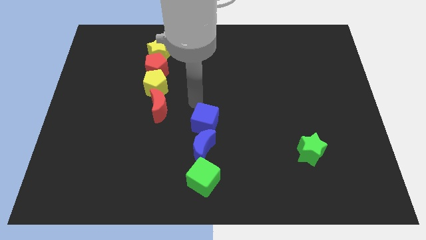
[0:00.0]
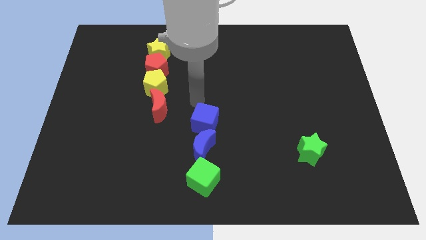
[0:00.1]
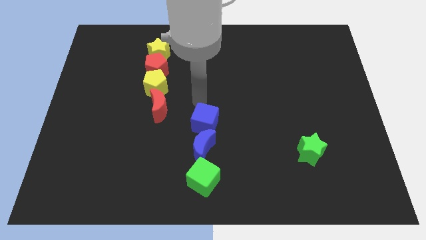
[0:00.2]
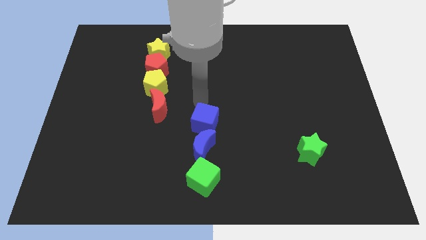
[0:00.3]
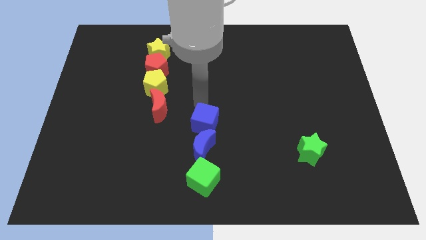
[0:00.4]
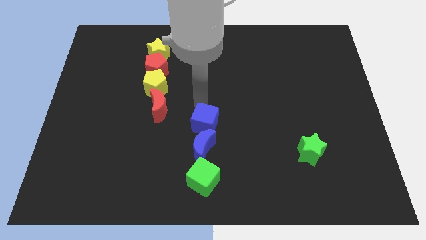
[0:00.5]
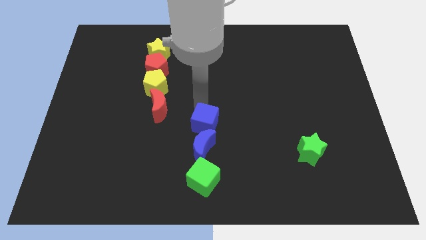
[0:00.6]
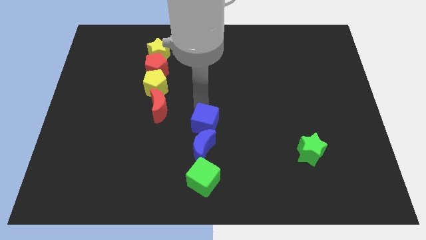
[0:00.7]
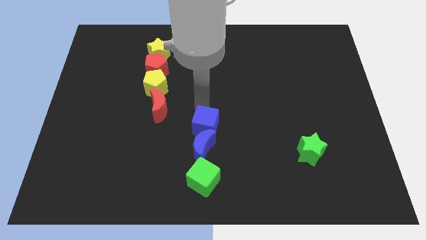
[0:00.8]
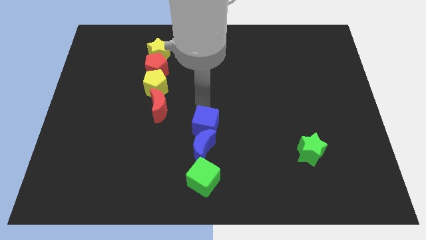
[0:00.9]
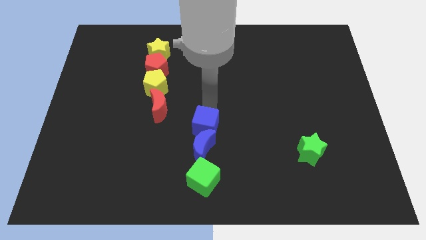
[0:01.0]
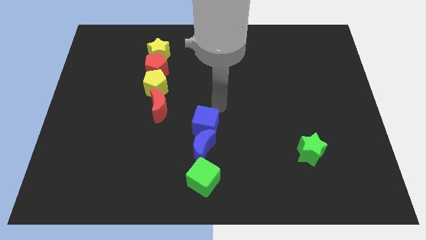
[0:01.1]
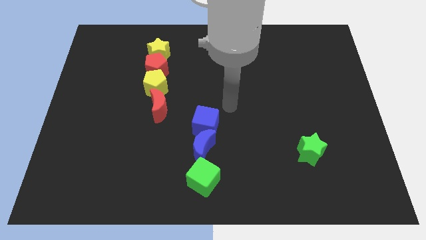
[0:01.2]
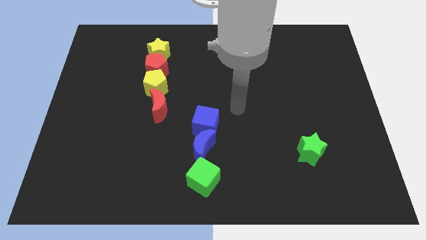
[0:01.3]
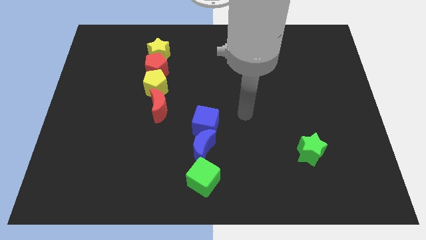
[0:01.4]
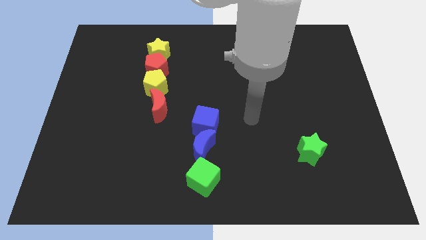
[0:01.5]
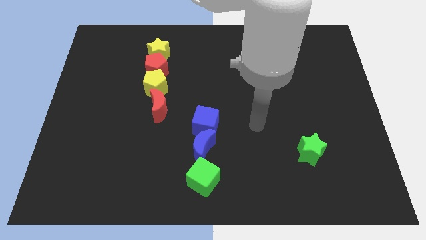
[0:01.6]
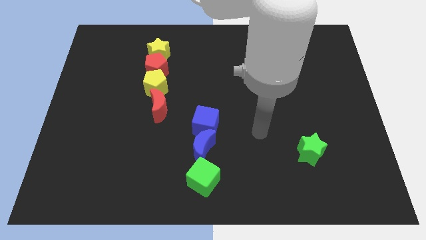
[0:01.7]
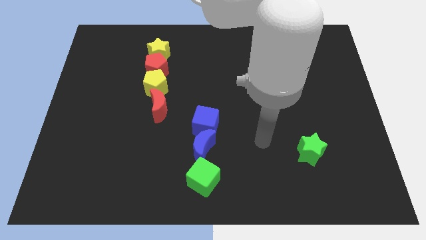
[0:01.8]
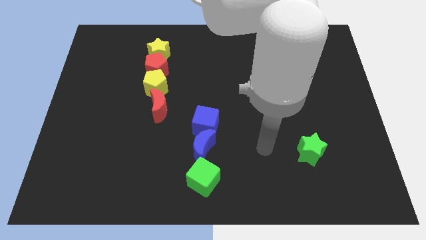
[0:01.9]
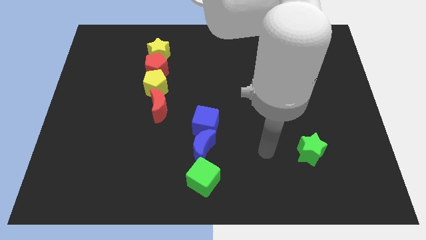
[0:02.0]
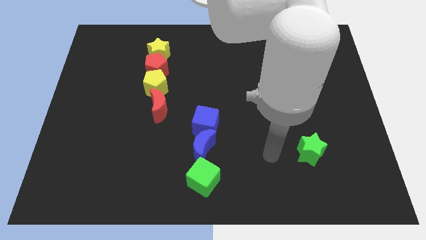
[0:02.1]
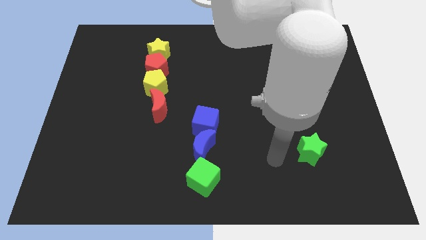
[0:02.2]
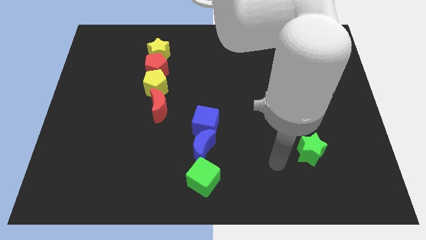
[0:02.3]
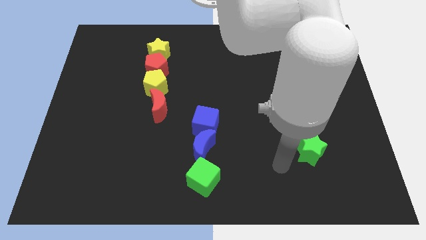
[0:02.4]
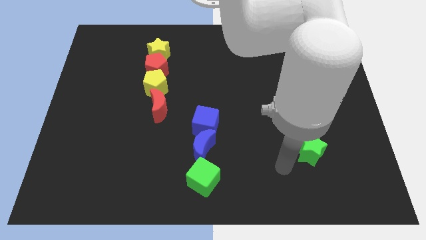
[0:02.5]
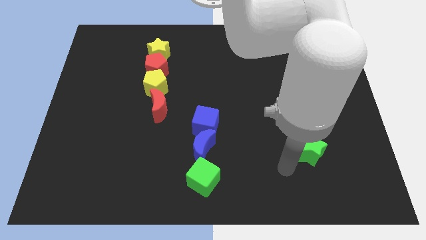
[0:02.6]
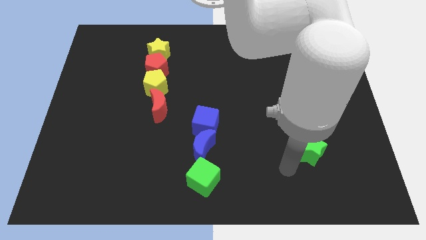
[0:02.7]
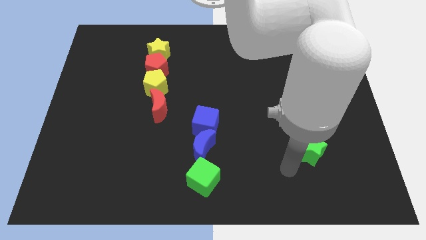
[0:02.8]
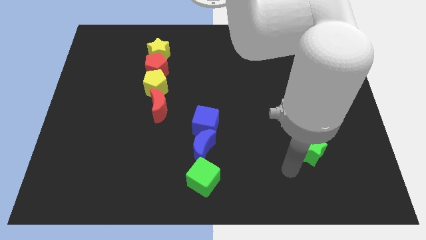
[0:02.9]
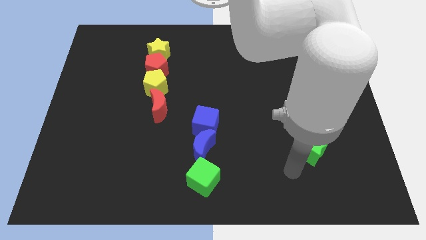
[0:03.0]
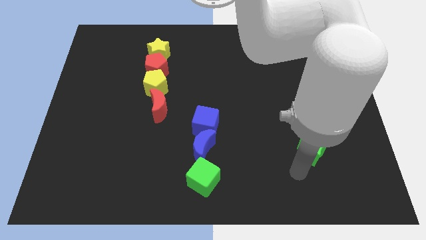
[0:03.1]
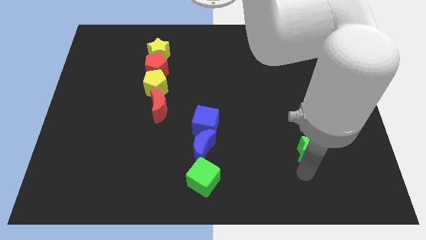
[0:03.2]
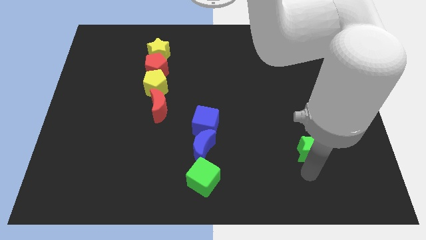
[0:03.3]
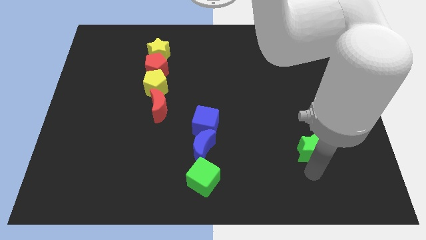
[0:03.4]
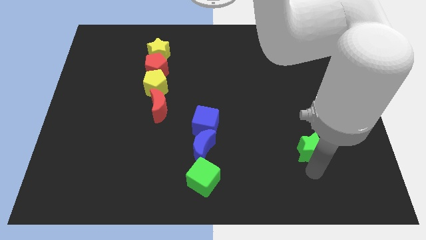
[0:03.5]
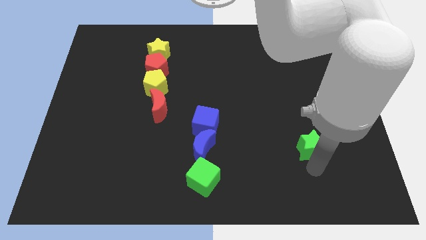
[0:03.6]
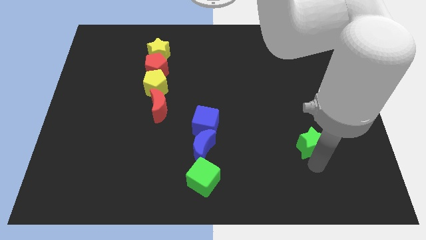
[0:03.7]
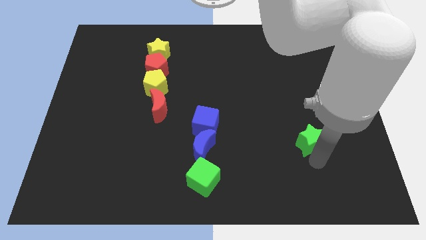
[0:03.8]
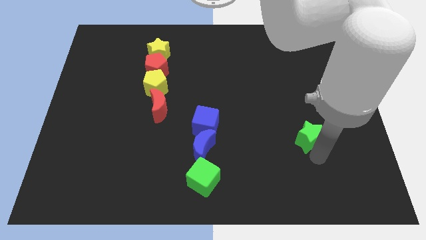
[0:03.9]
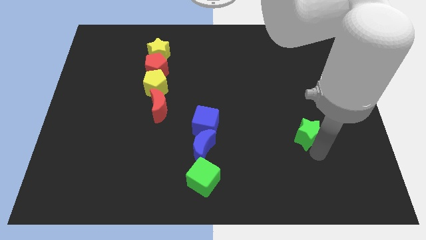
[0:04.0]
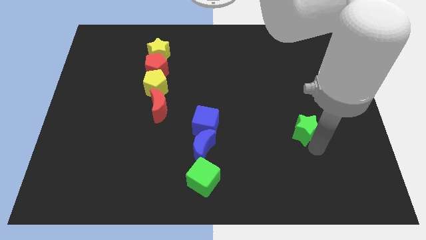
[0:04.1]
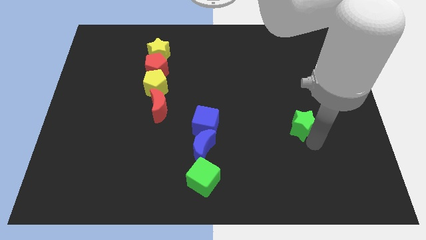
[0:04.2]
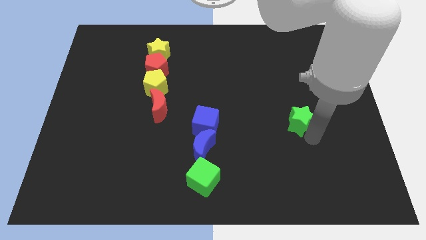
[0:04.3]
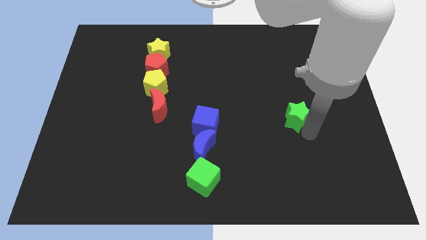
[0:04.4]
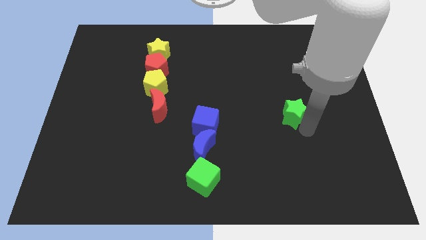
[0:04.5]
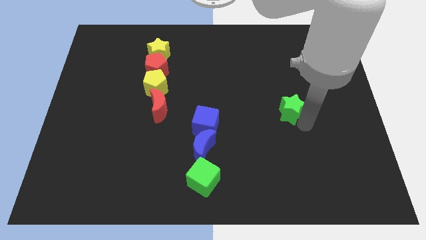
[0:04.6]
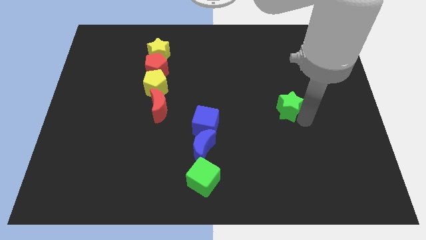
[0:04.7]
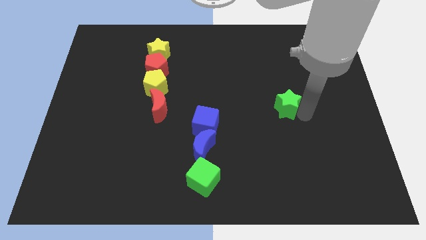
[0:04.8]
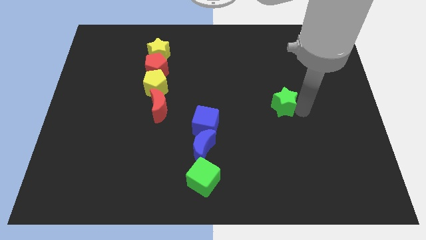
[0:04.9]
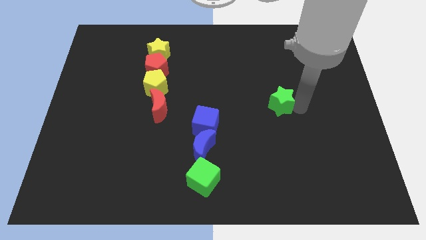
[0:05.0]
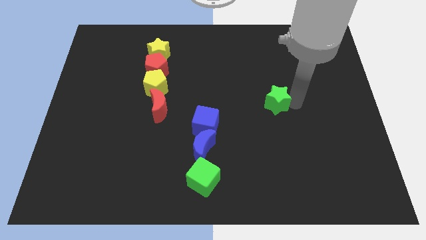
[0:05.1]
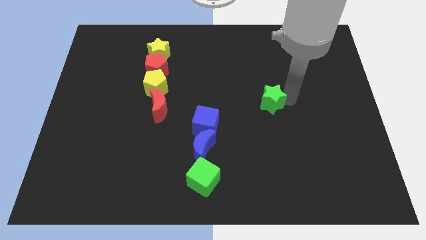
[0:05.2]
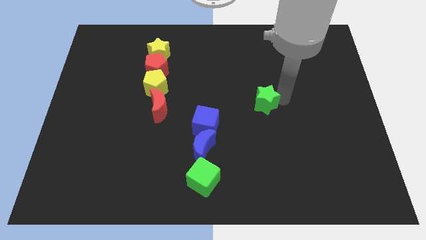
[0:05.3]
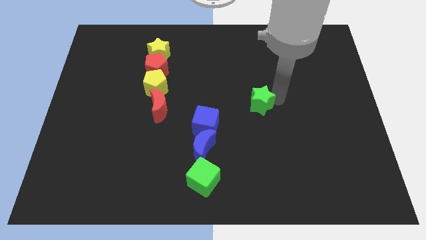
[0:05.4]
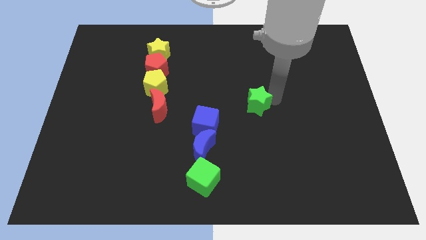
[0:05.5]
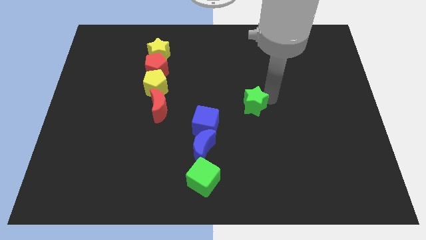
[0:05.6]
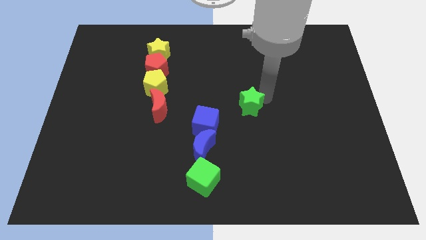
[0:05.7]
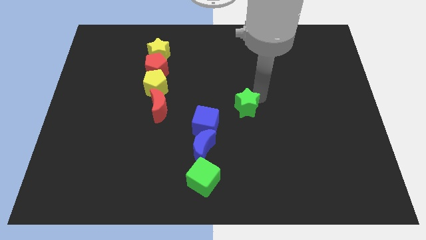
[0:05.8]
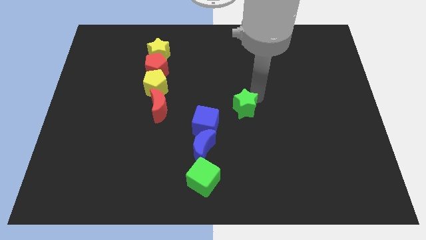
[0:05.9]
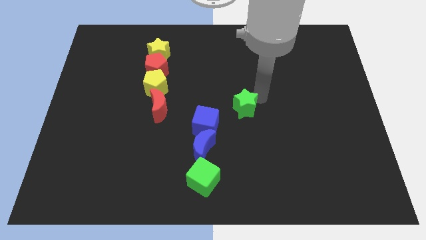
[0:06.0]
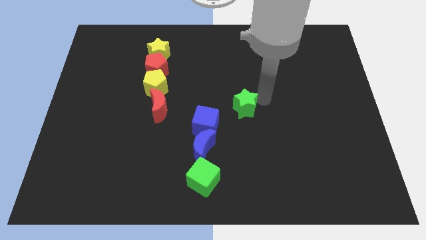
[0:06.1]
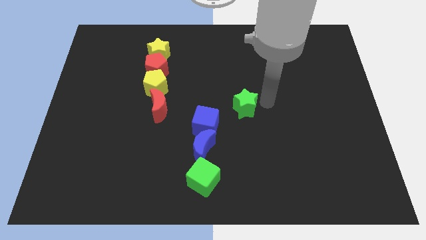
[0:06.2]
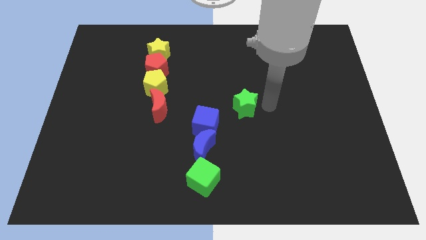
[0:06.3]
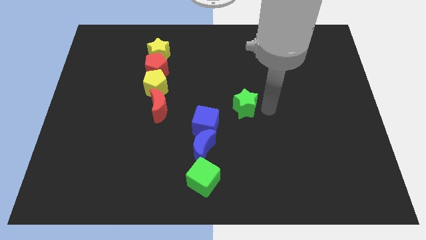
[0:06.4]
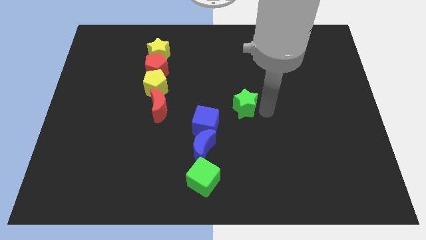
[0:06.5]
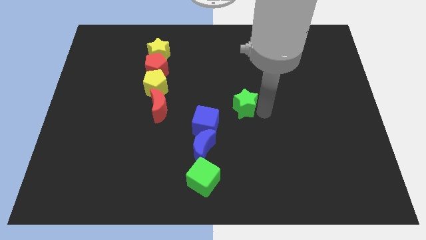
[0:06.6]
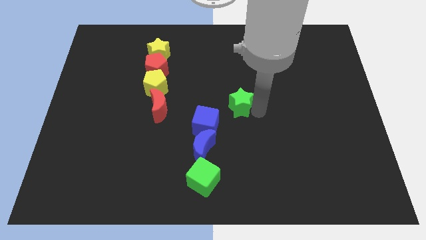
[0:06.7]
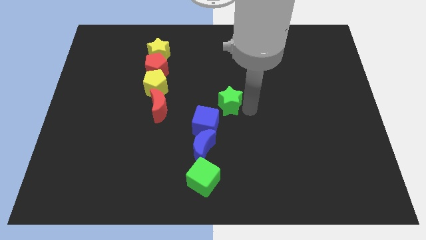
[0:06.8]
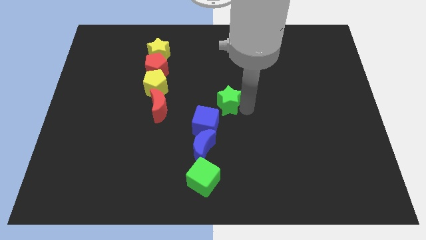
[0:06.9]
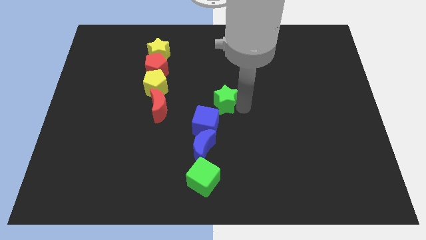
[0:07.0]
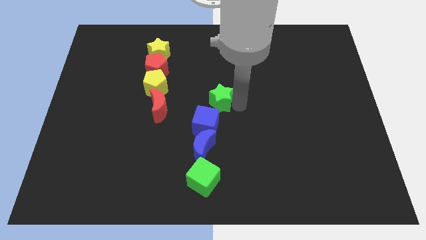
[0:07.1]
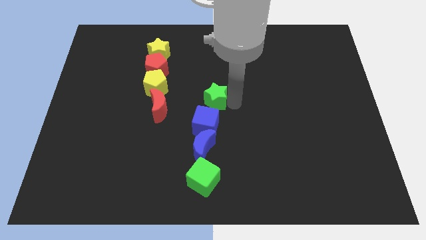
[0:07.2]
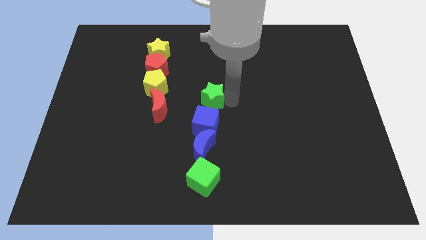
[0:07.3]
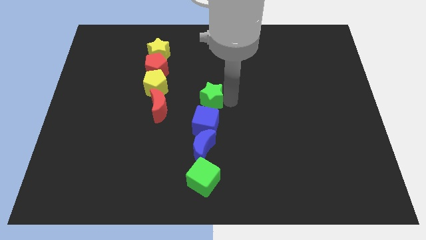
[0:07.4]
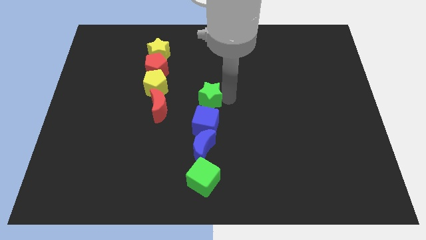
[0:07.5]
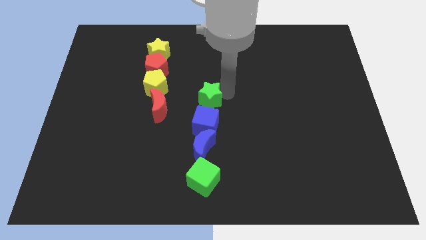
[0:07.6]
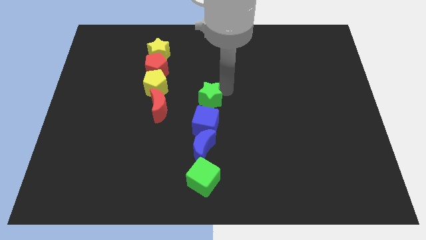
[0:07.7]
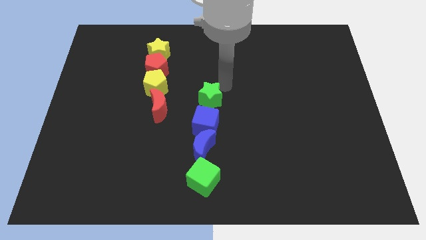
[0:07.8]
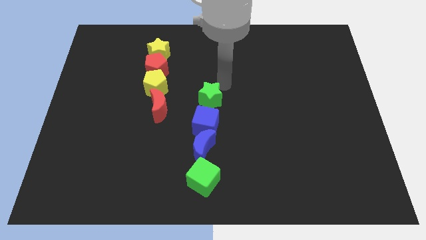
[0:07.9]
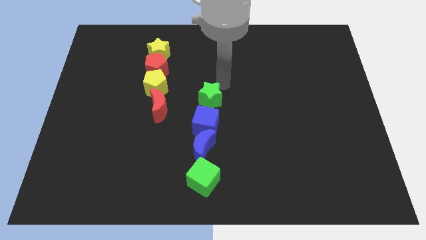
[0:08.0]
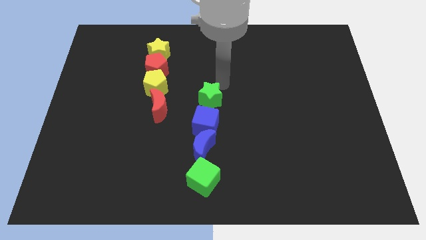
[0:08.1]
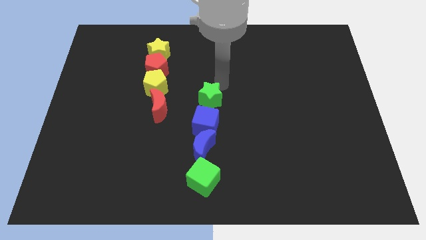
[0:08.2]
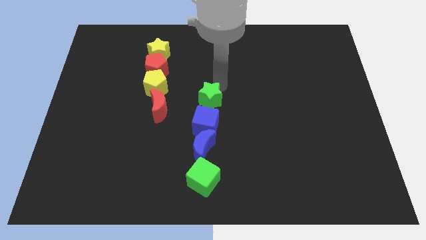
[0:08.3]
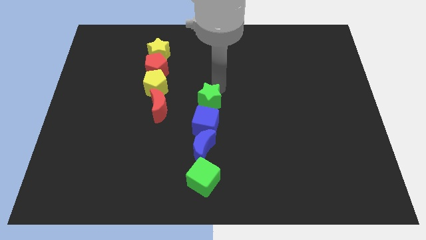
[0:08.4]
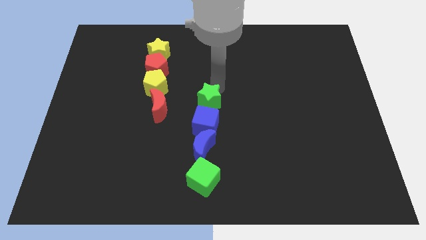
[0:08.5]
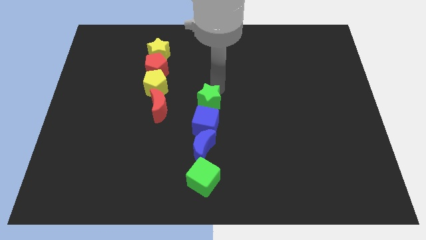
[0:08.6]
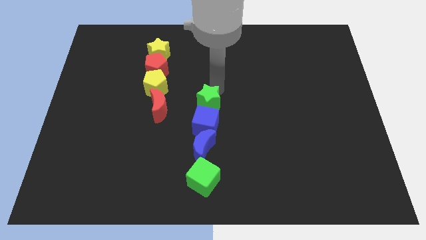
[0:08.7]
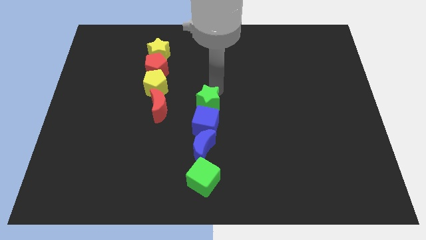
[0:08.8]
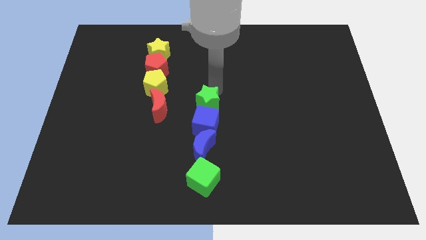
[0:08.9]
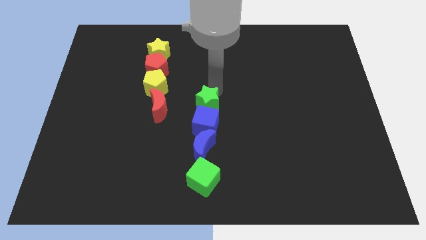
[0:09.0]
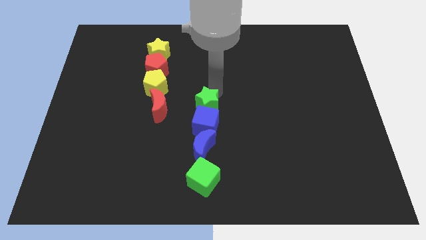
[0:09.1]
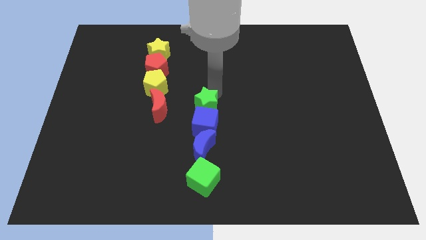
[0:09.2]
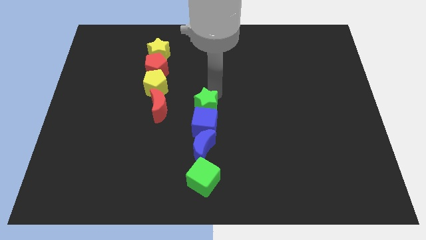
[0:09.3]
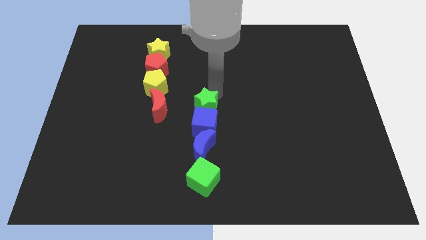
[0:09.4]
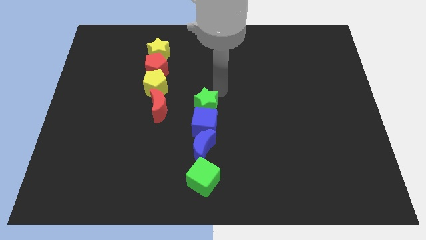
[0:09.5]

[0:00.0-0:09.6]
move the green star towards the top of the blue cube
